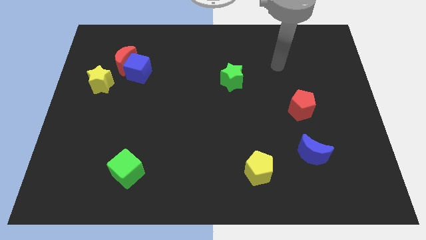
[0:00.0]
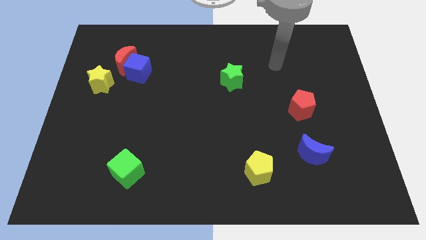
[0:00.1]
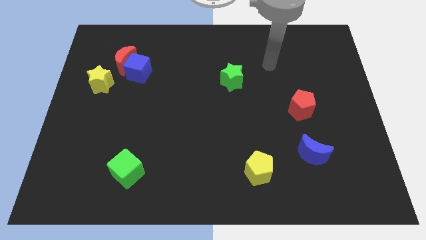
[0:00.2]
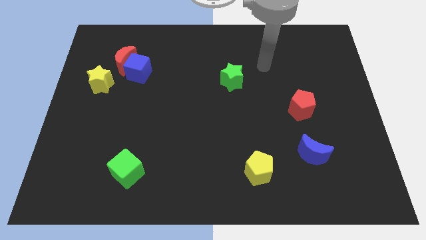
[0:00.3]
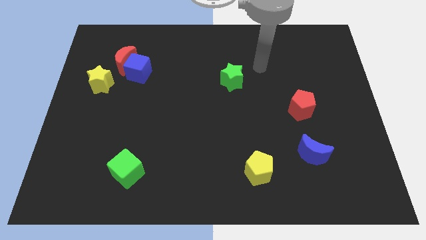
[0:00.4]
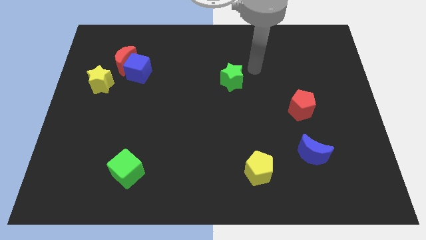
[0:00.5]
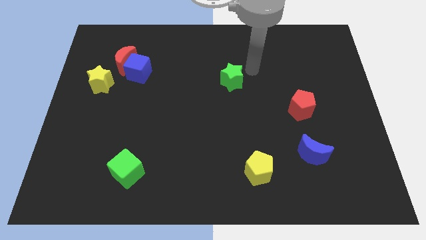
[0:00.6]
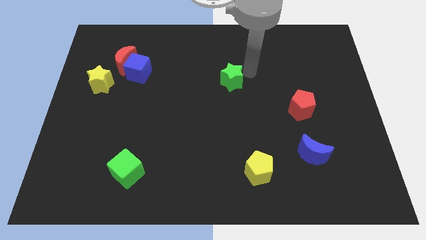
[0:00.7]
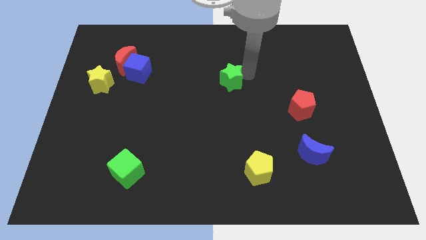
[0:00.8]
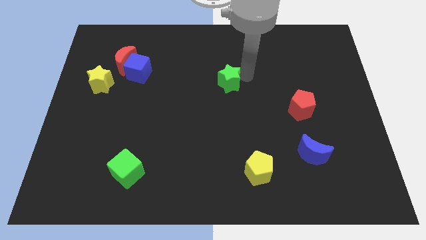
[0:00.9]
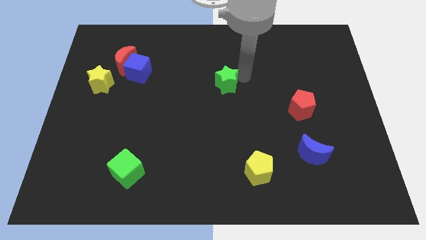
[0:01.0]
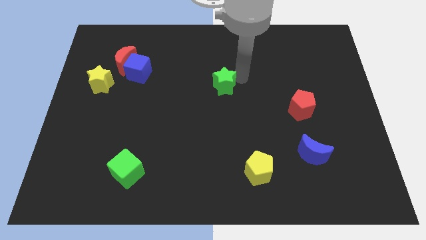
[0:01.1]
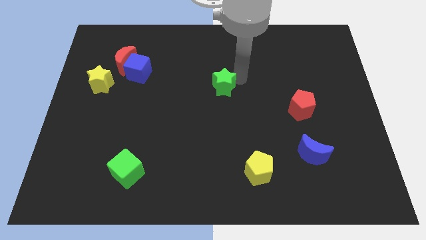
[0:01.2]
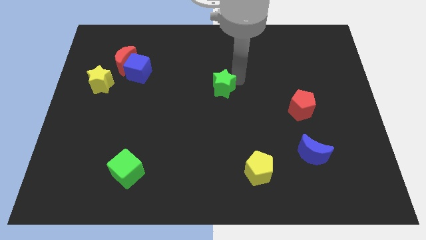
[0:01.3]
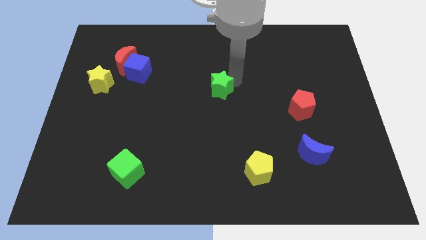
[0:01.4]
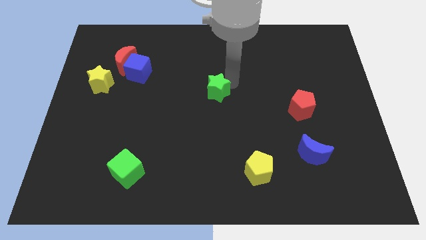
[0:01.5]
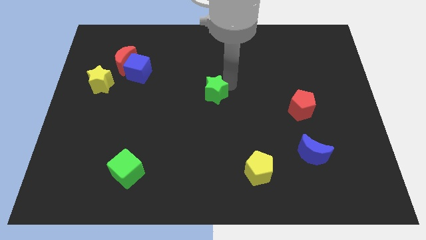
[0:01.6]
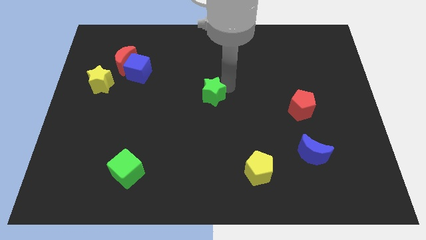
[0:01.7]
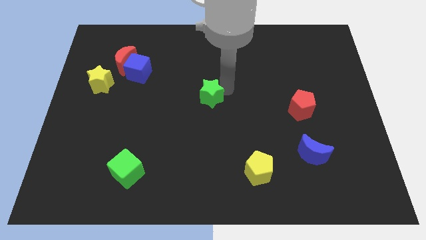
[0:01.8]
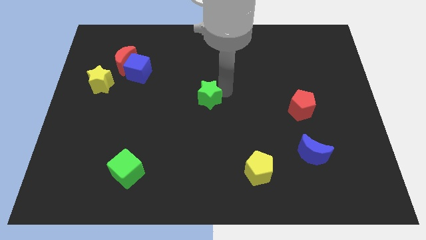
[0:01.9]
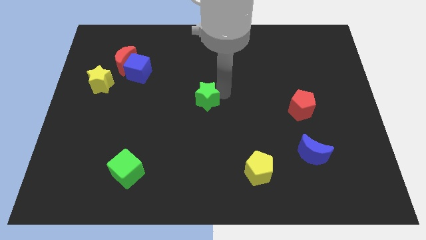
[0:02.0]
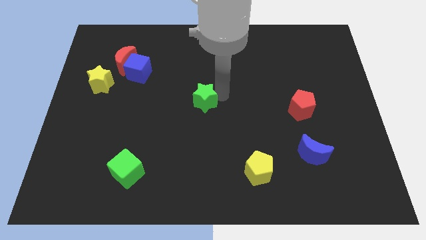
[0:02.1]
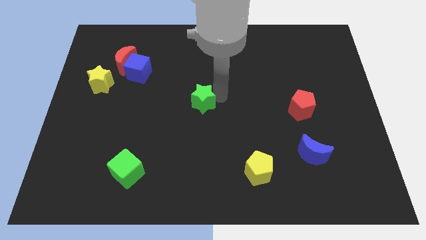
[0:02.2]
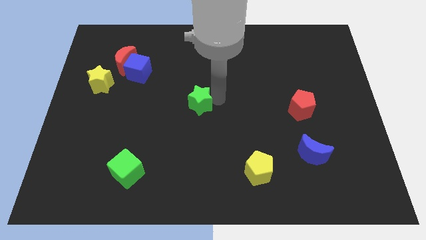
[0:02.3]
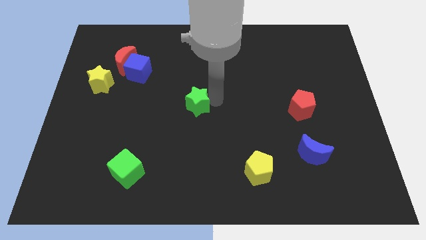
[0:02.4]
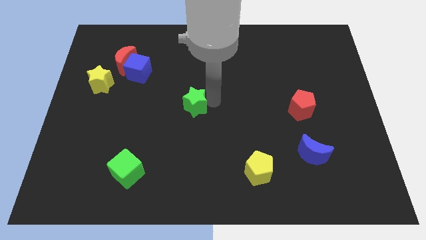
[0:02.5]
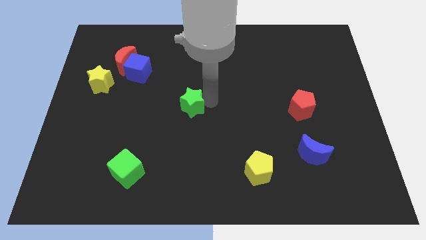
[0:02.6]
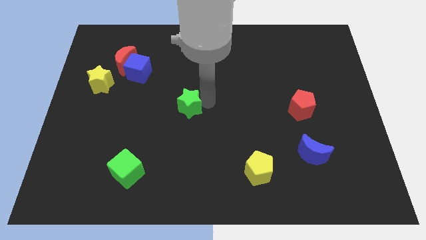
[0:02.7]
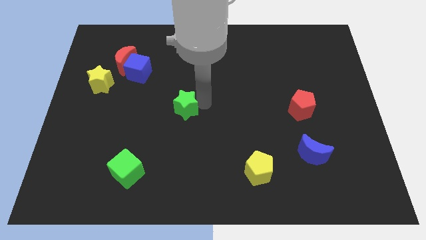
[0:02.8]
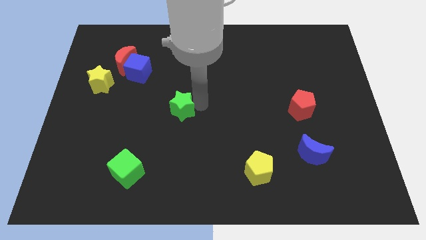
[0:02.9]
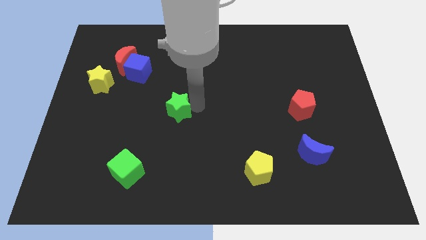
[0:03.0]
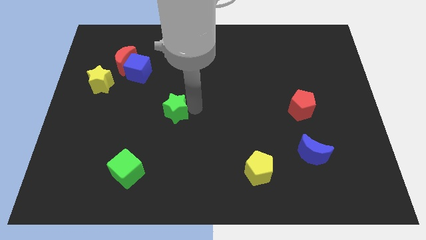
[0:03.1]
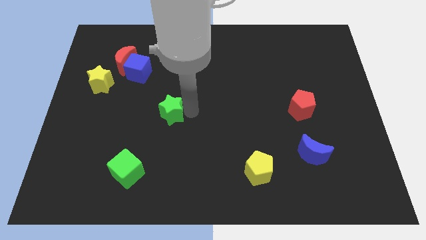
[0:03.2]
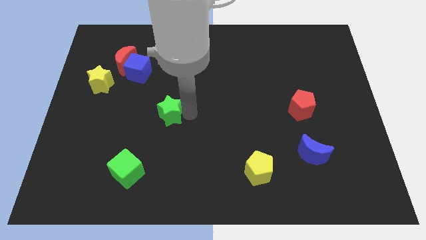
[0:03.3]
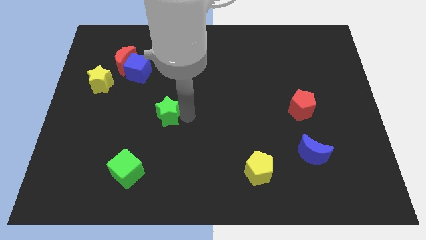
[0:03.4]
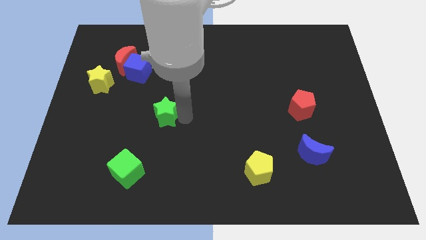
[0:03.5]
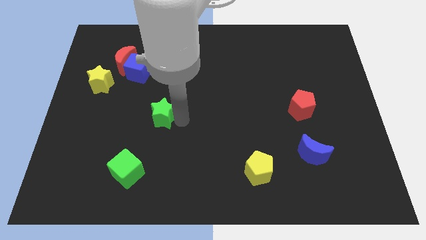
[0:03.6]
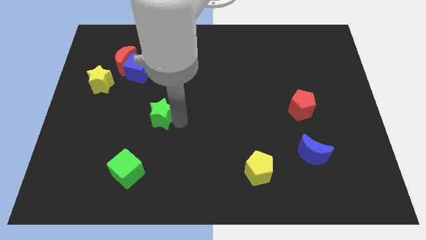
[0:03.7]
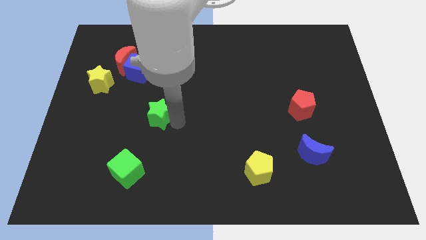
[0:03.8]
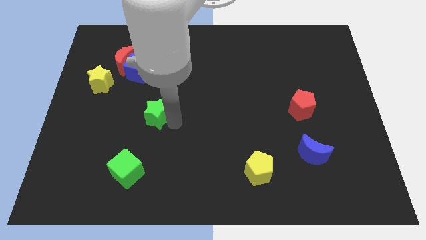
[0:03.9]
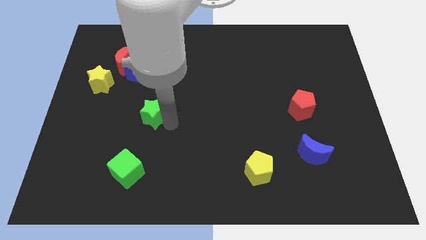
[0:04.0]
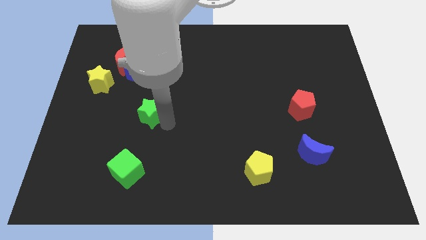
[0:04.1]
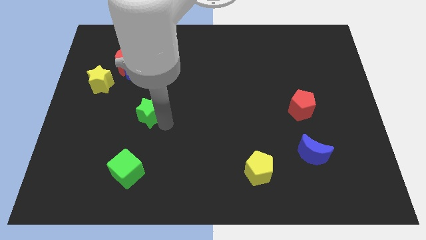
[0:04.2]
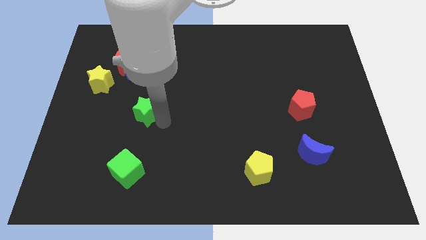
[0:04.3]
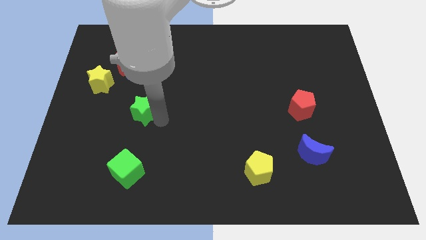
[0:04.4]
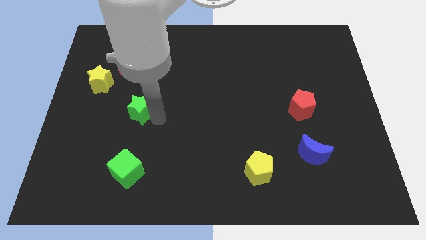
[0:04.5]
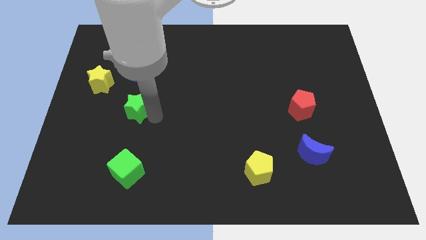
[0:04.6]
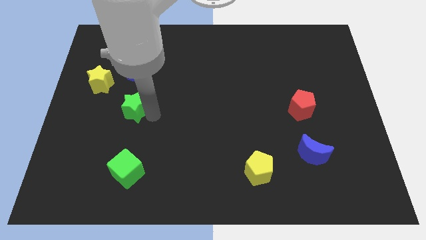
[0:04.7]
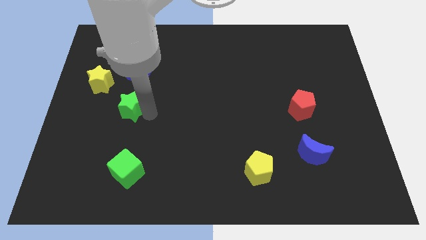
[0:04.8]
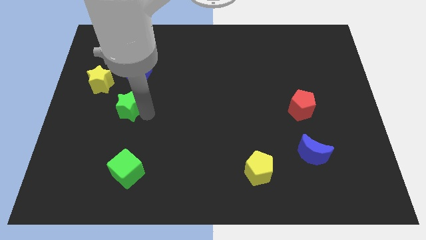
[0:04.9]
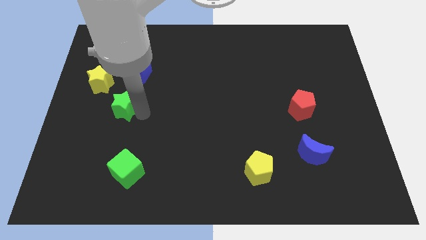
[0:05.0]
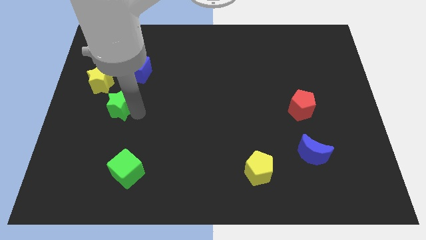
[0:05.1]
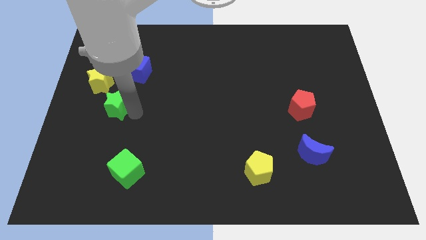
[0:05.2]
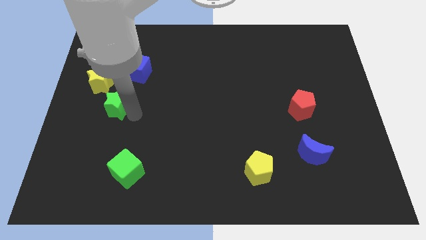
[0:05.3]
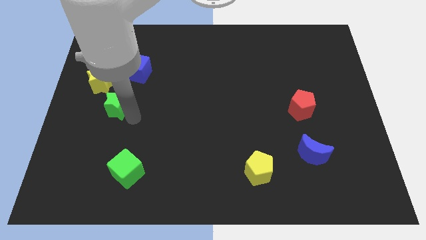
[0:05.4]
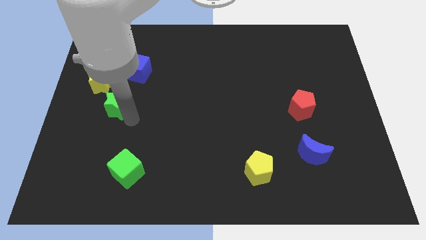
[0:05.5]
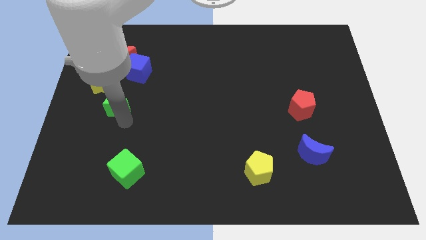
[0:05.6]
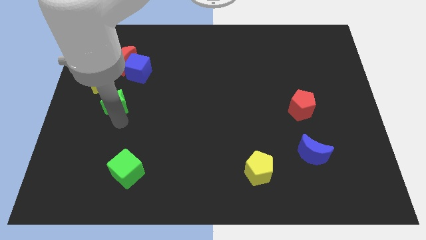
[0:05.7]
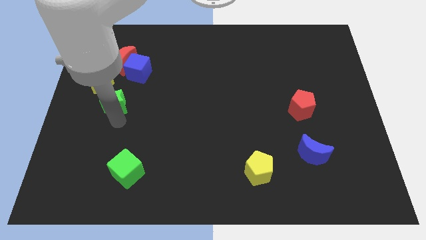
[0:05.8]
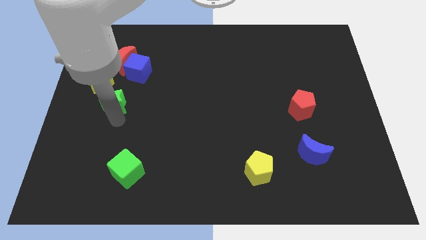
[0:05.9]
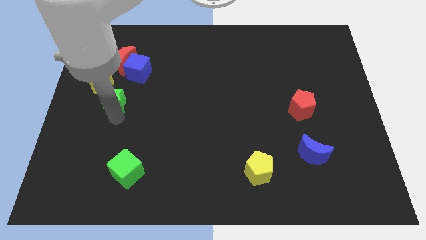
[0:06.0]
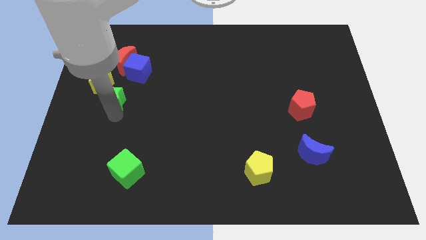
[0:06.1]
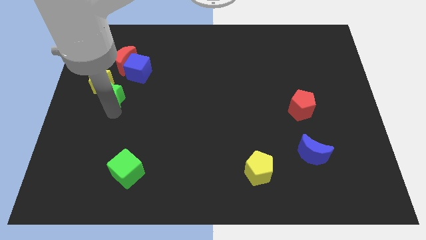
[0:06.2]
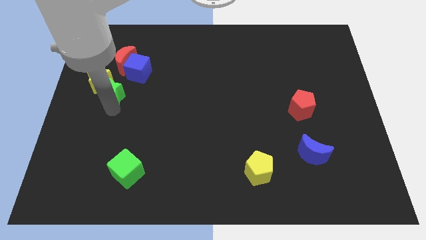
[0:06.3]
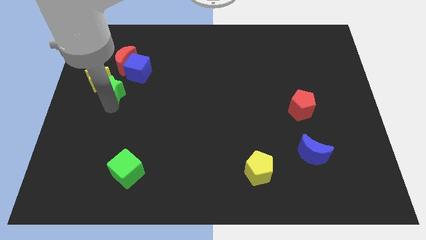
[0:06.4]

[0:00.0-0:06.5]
move the green star close to the yellow star

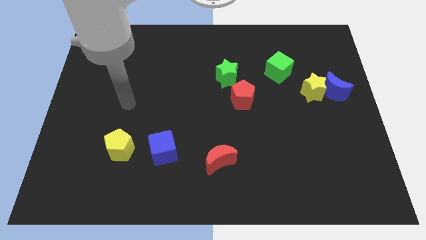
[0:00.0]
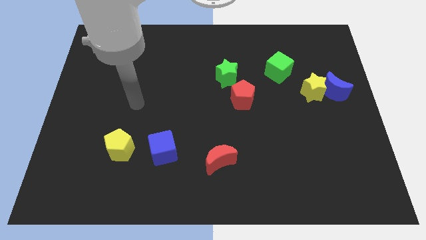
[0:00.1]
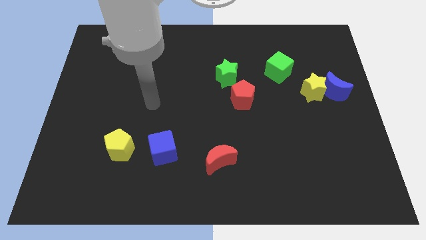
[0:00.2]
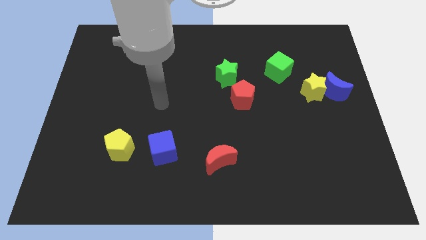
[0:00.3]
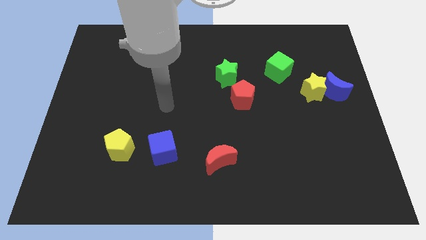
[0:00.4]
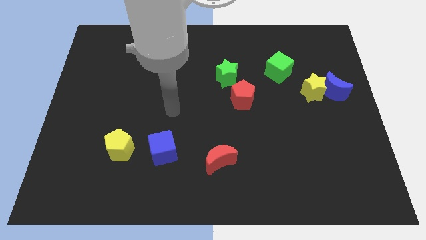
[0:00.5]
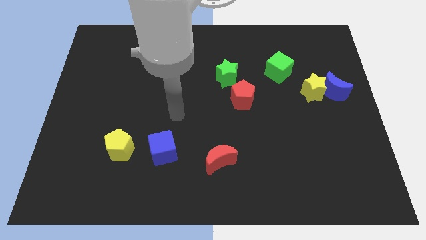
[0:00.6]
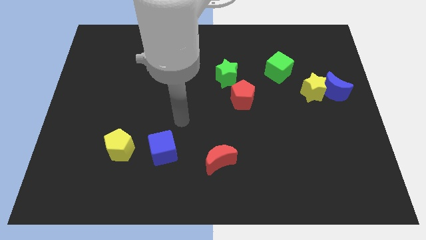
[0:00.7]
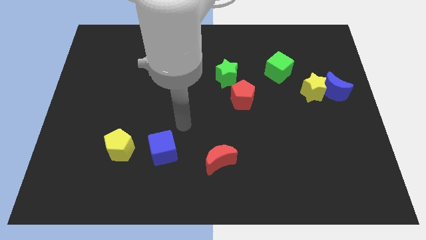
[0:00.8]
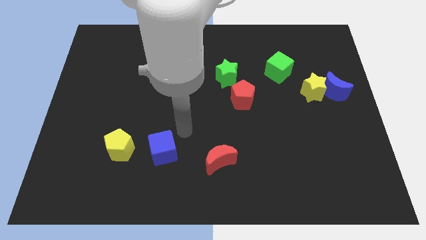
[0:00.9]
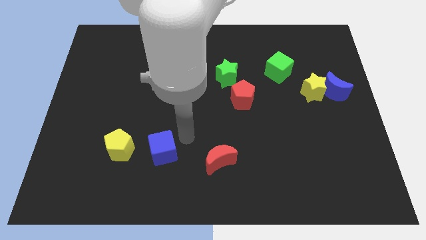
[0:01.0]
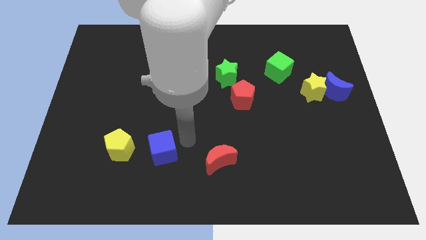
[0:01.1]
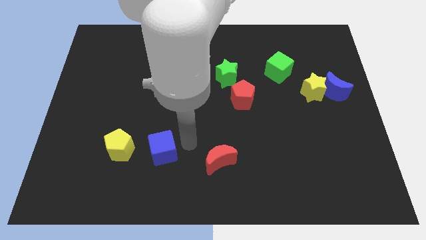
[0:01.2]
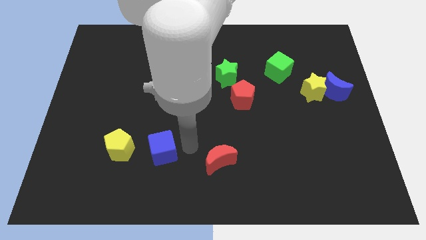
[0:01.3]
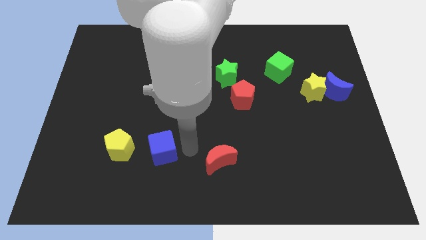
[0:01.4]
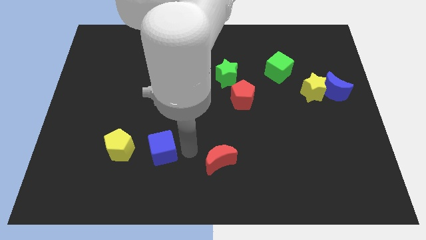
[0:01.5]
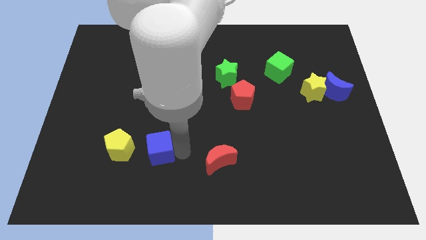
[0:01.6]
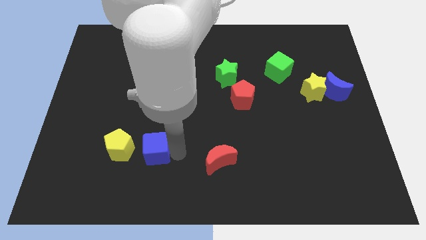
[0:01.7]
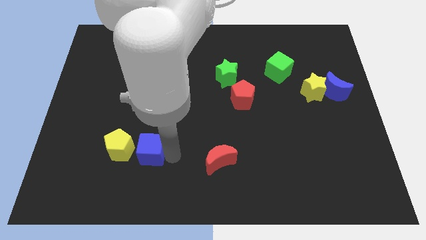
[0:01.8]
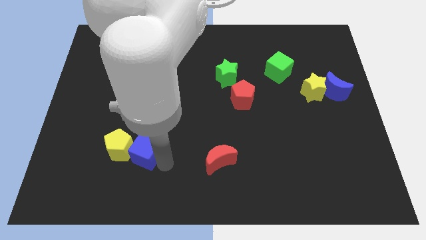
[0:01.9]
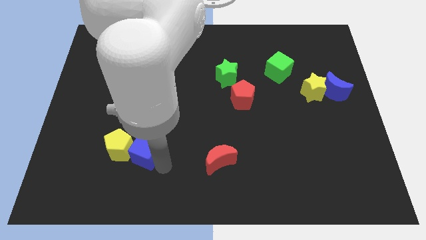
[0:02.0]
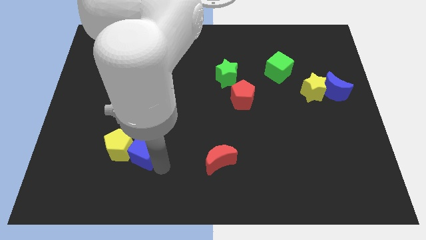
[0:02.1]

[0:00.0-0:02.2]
move the blue cube close to the yellow pentagon
